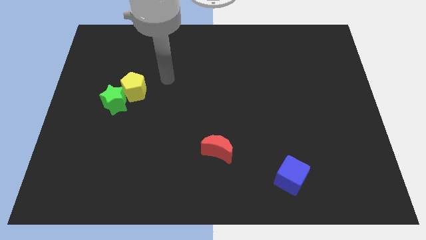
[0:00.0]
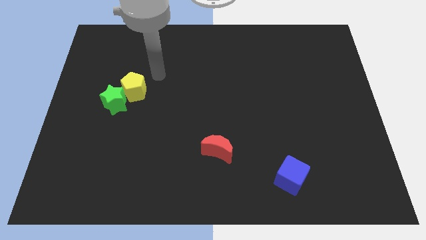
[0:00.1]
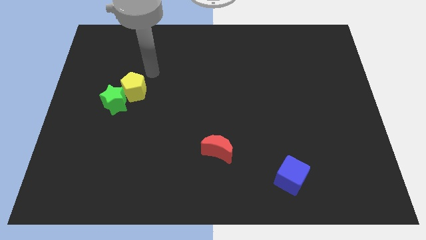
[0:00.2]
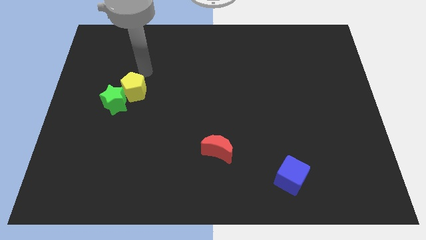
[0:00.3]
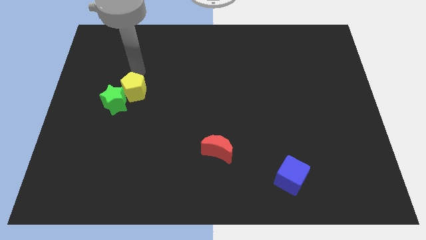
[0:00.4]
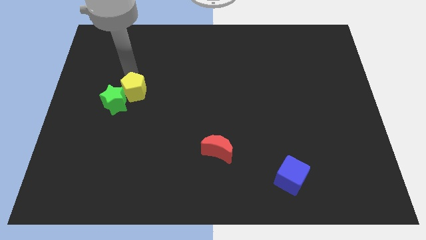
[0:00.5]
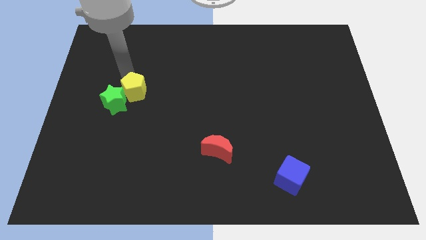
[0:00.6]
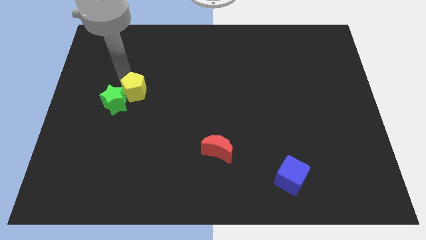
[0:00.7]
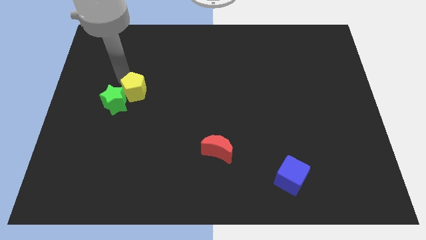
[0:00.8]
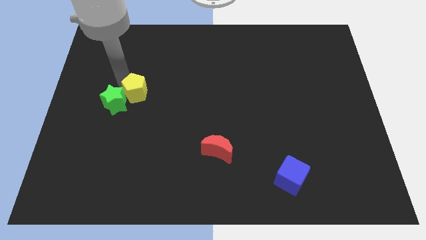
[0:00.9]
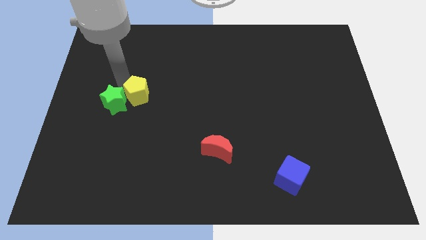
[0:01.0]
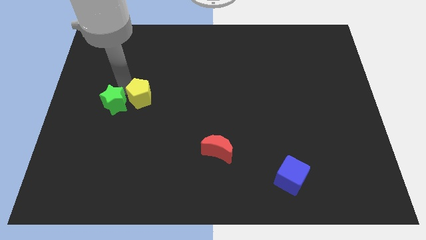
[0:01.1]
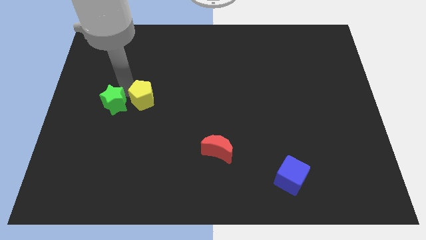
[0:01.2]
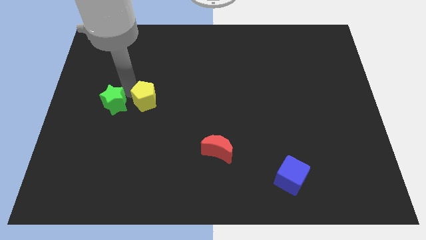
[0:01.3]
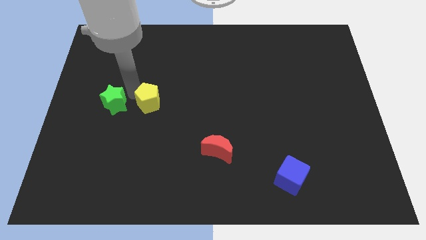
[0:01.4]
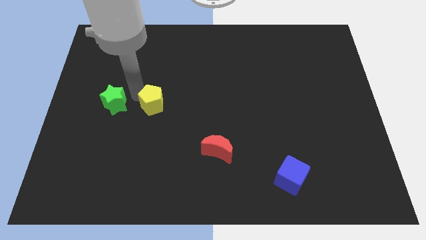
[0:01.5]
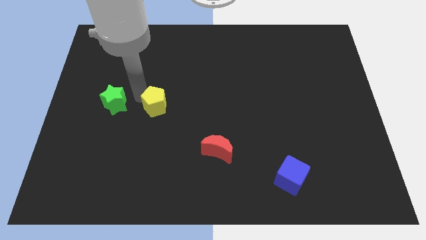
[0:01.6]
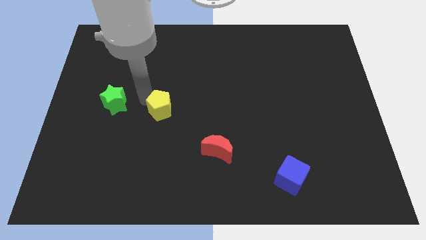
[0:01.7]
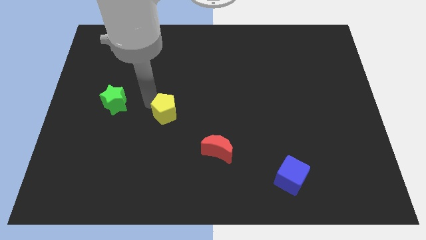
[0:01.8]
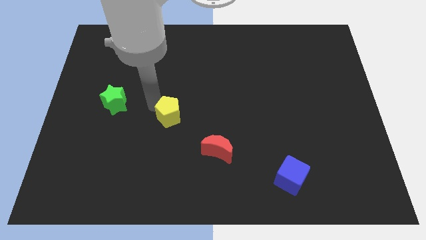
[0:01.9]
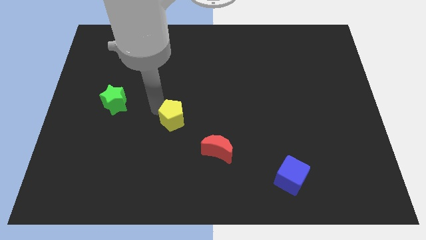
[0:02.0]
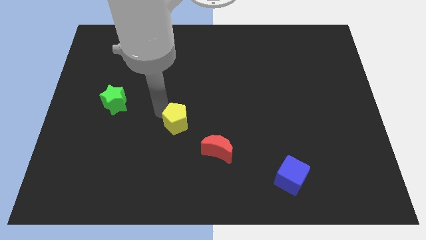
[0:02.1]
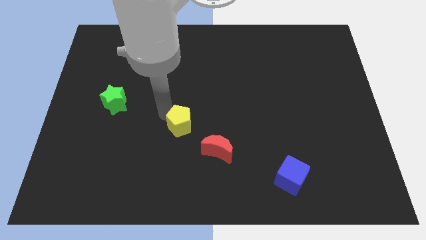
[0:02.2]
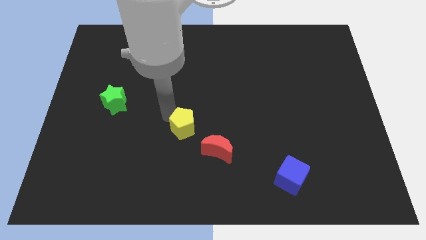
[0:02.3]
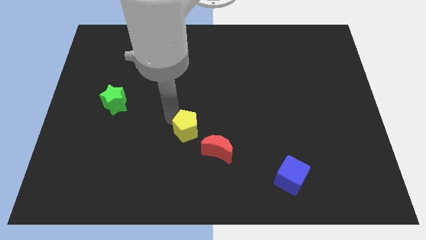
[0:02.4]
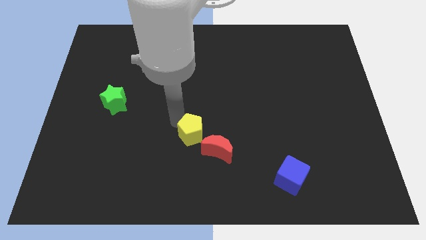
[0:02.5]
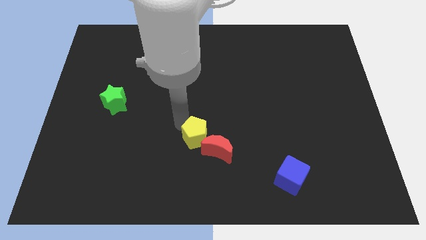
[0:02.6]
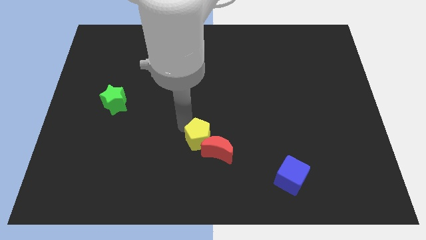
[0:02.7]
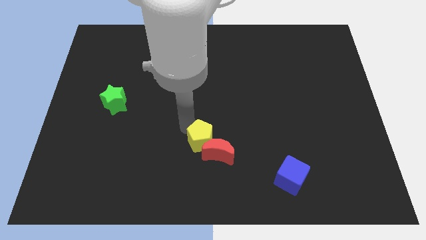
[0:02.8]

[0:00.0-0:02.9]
move the yellow block towards the red block

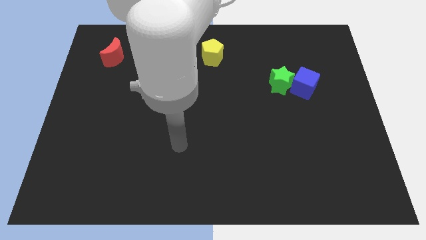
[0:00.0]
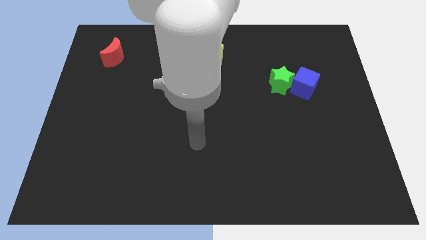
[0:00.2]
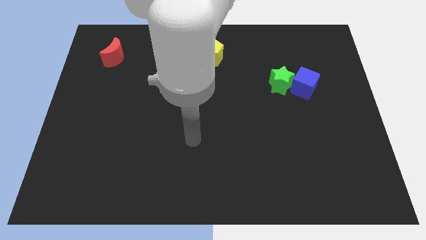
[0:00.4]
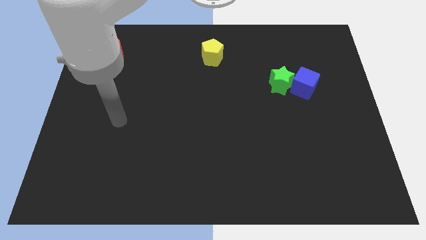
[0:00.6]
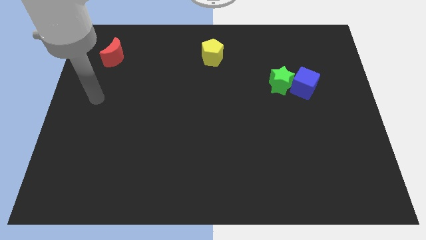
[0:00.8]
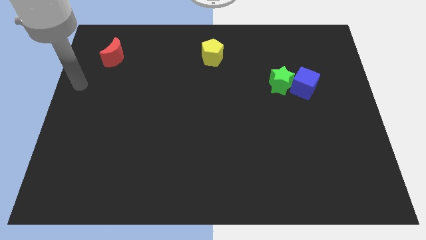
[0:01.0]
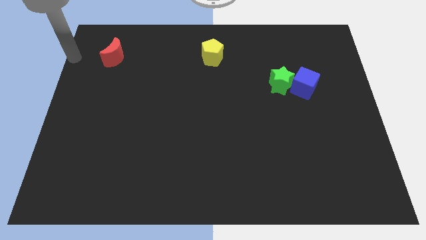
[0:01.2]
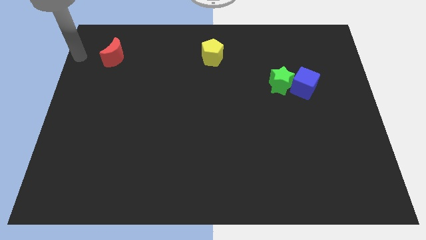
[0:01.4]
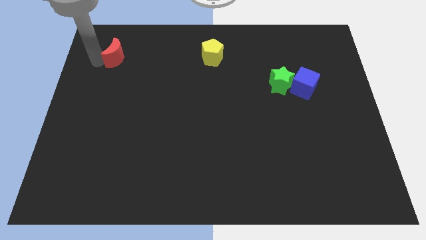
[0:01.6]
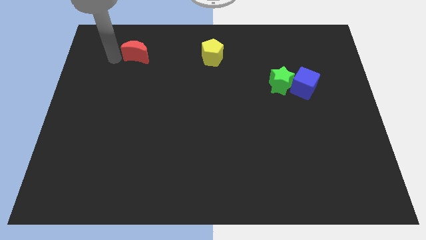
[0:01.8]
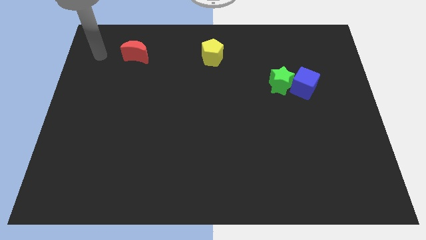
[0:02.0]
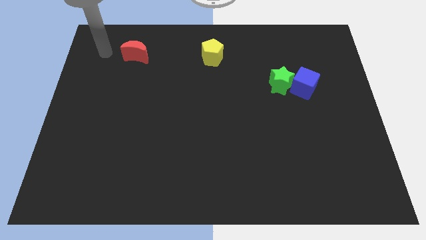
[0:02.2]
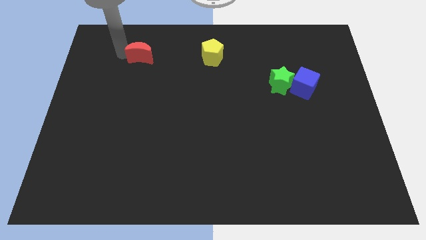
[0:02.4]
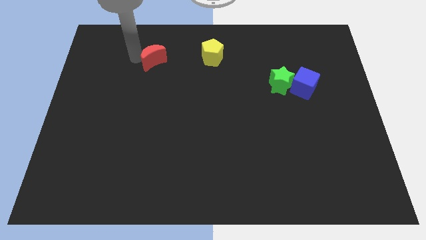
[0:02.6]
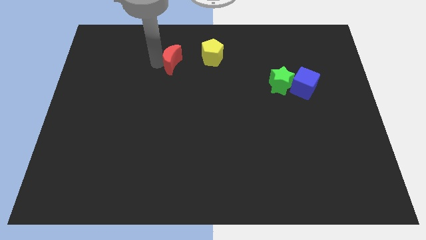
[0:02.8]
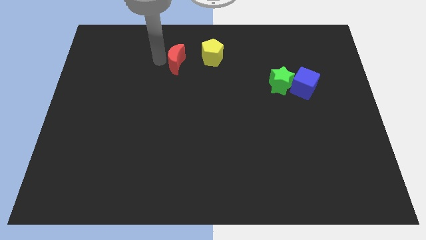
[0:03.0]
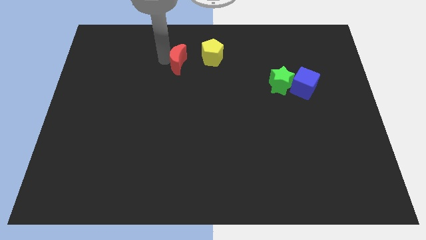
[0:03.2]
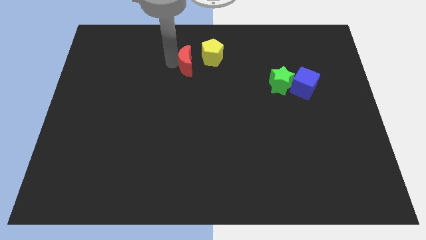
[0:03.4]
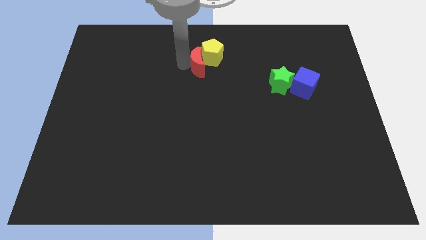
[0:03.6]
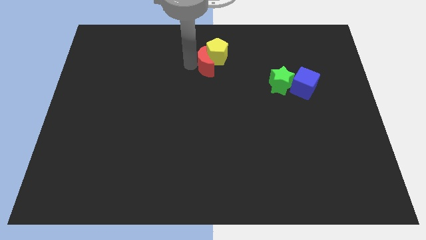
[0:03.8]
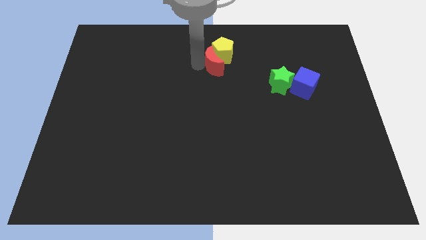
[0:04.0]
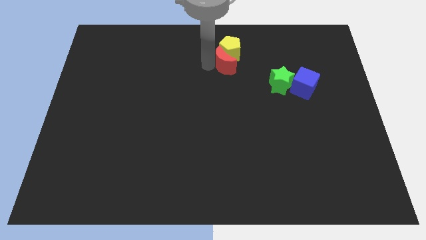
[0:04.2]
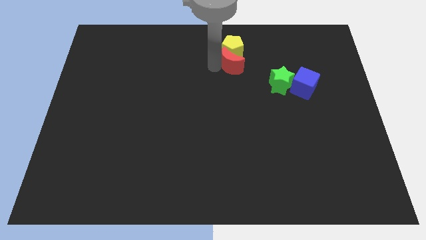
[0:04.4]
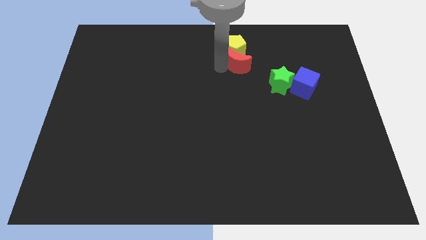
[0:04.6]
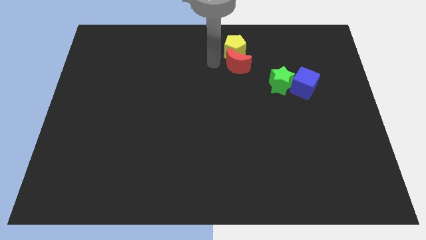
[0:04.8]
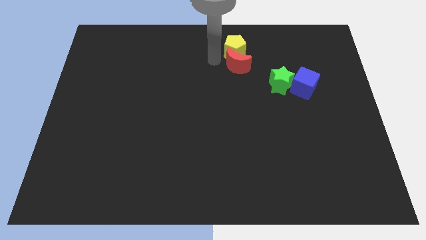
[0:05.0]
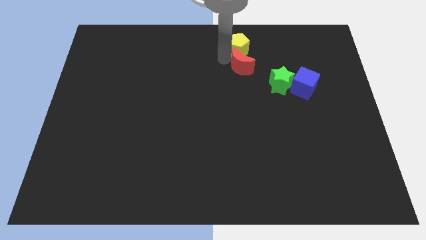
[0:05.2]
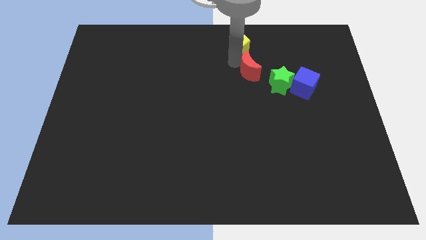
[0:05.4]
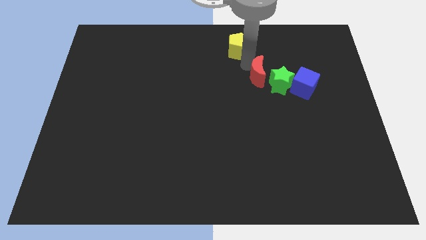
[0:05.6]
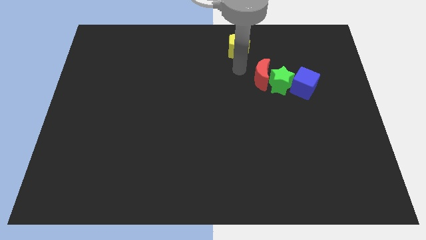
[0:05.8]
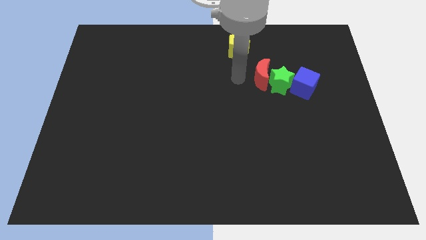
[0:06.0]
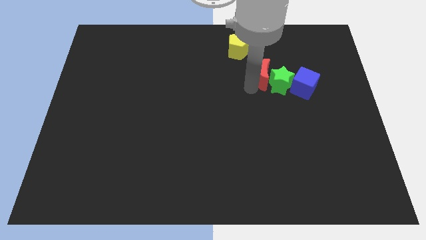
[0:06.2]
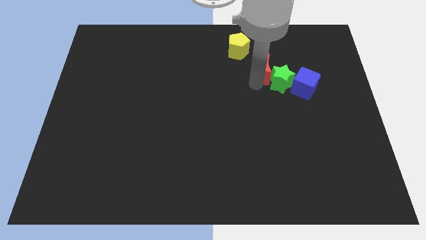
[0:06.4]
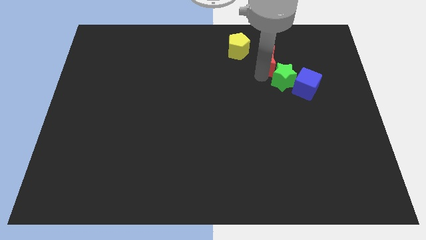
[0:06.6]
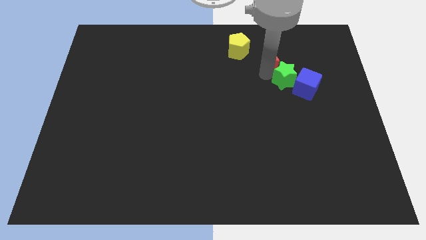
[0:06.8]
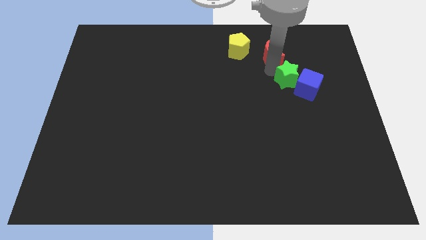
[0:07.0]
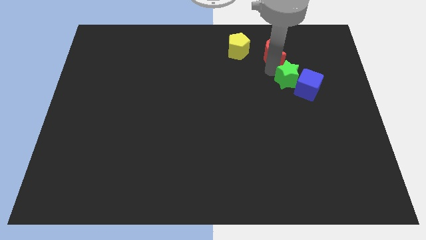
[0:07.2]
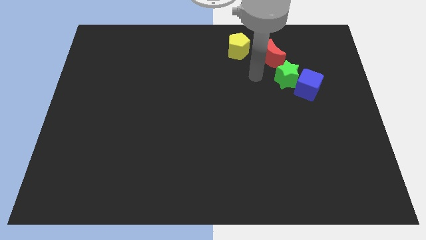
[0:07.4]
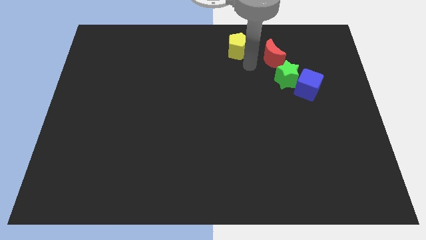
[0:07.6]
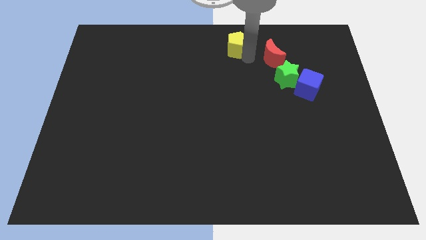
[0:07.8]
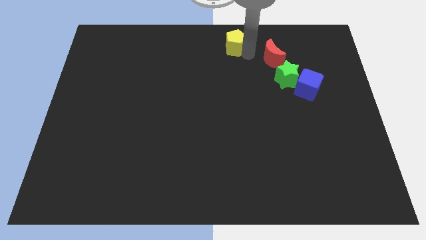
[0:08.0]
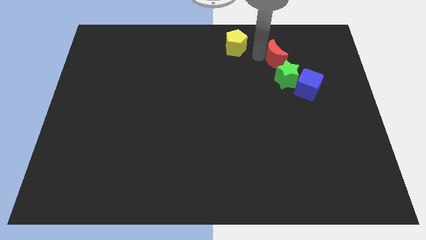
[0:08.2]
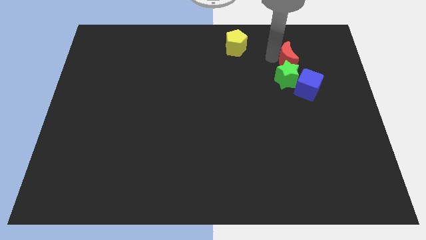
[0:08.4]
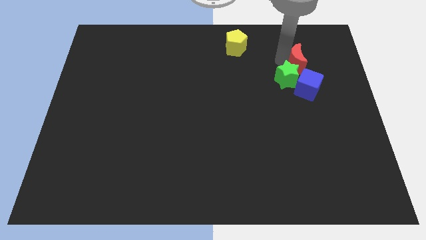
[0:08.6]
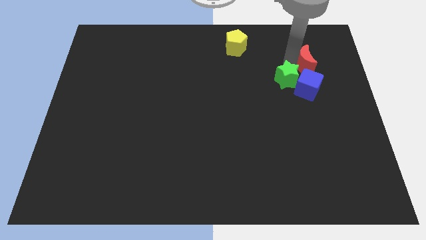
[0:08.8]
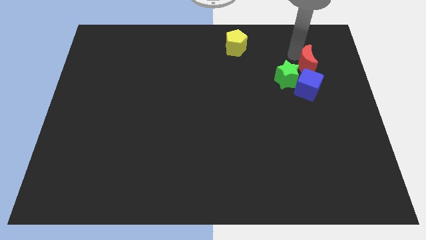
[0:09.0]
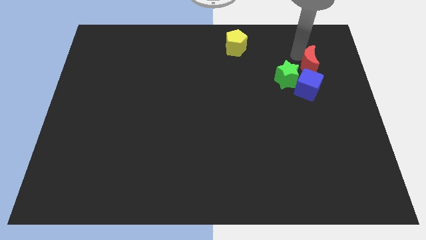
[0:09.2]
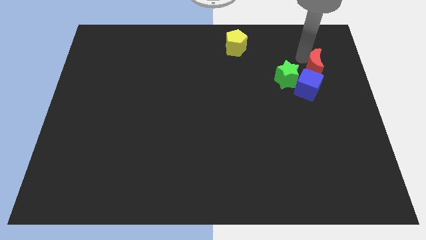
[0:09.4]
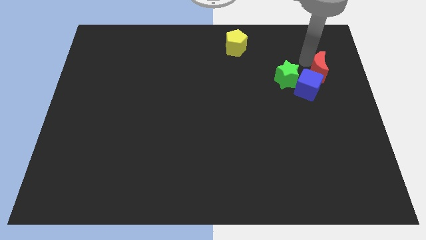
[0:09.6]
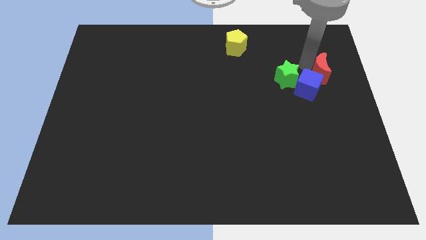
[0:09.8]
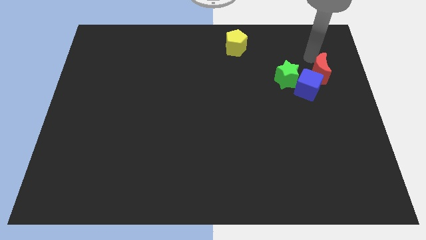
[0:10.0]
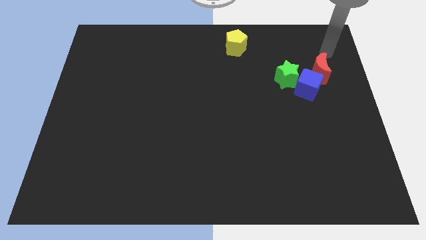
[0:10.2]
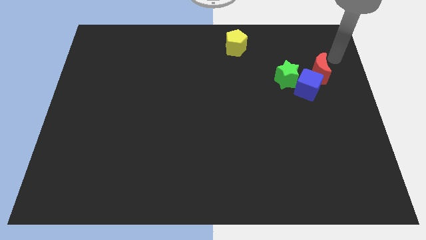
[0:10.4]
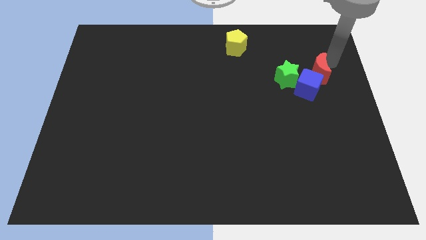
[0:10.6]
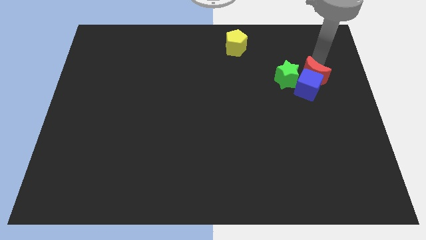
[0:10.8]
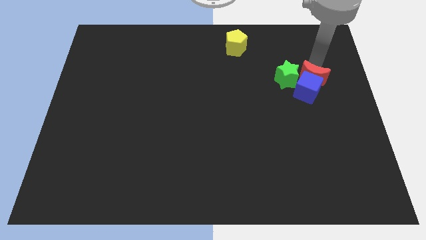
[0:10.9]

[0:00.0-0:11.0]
put the red moon next to the cube
